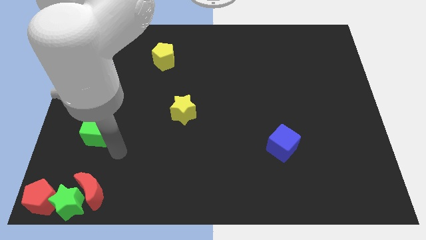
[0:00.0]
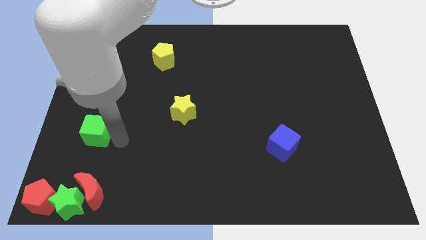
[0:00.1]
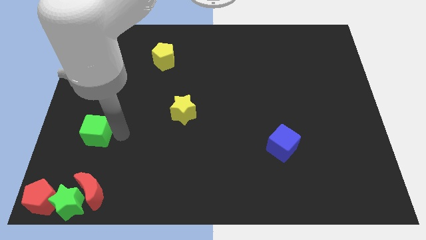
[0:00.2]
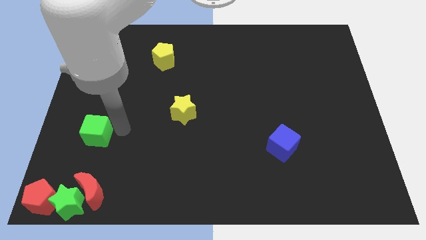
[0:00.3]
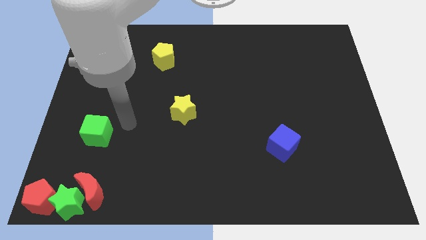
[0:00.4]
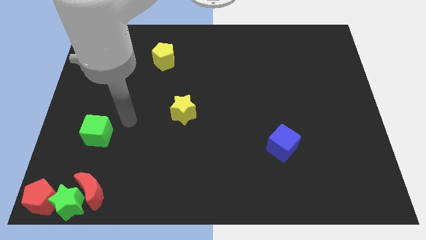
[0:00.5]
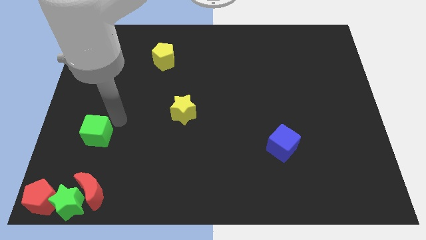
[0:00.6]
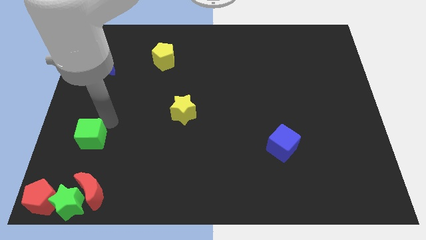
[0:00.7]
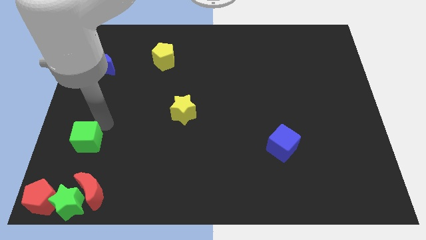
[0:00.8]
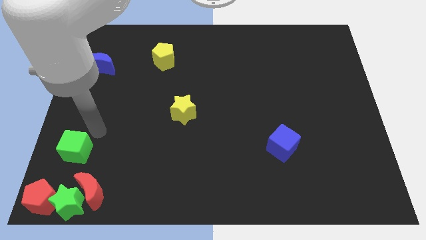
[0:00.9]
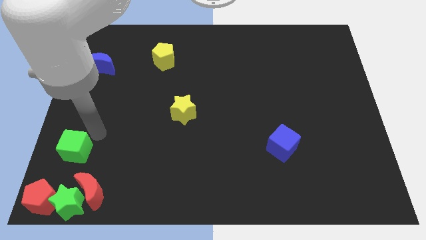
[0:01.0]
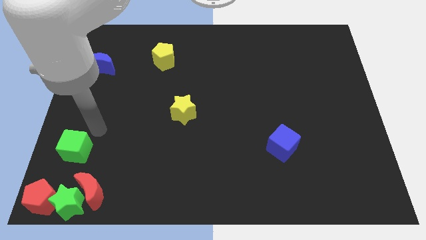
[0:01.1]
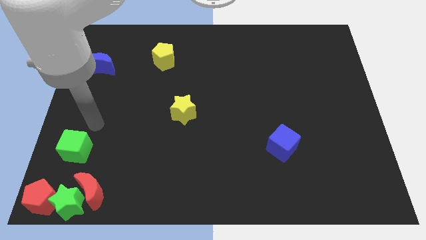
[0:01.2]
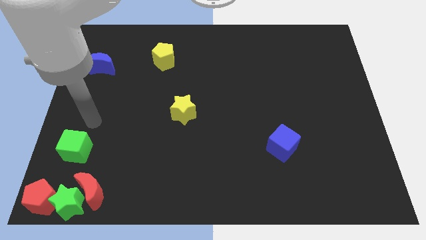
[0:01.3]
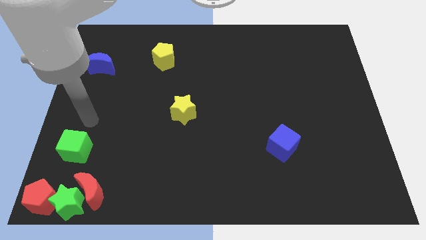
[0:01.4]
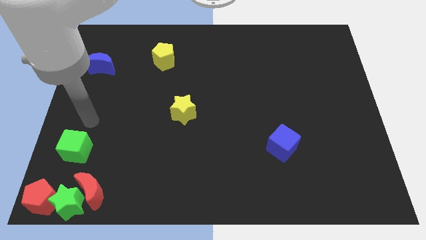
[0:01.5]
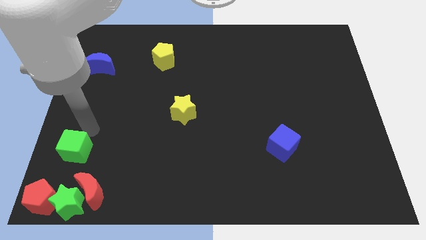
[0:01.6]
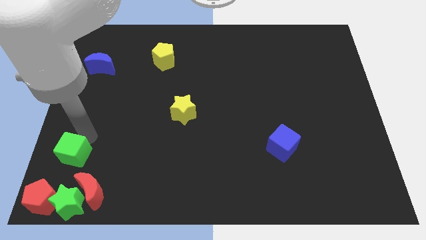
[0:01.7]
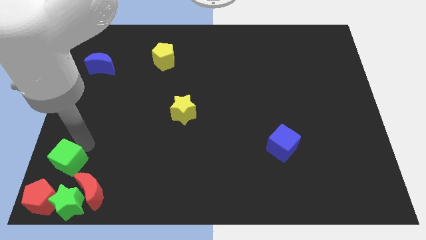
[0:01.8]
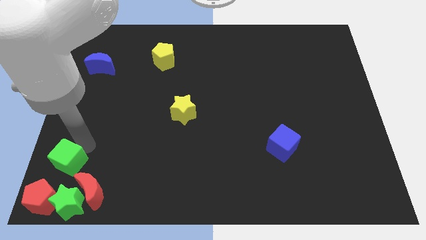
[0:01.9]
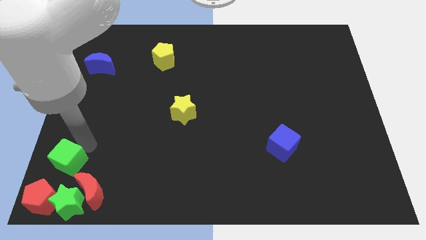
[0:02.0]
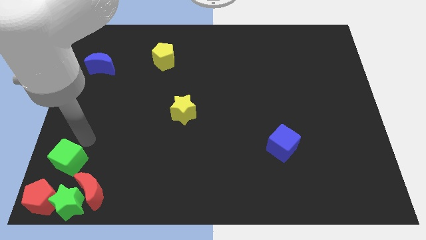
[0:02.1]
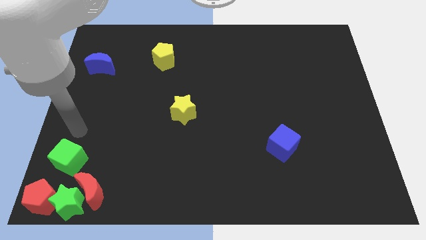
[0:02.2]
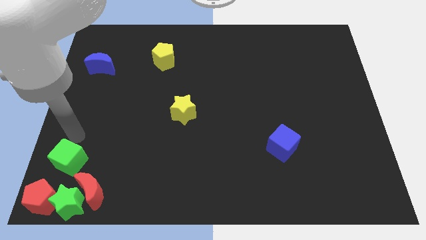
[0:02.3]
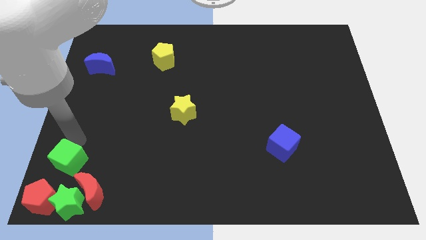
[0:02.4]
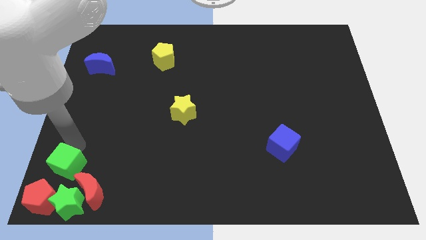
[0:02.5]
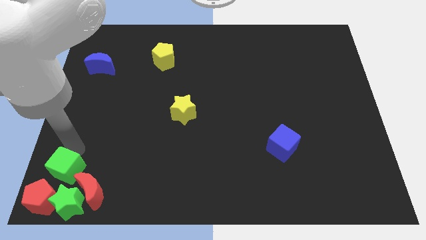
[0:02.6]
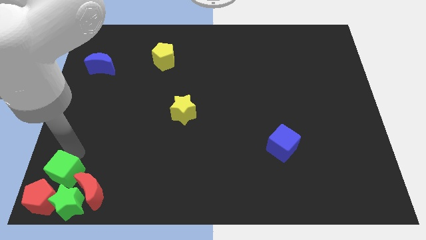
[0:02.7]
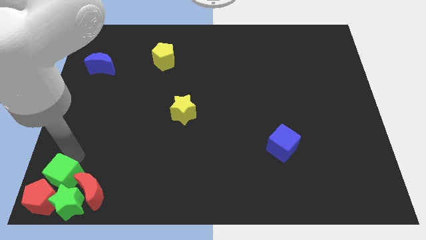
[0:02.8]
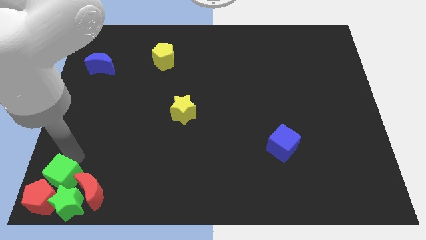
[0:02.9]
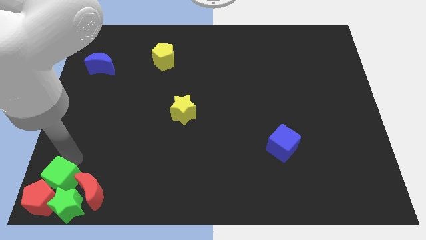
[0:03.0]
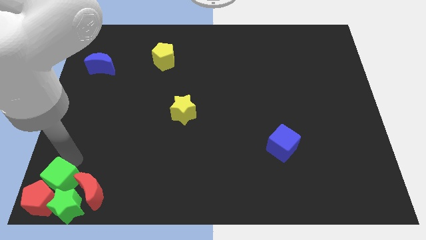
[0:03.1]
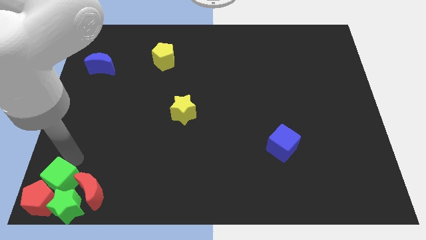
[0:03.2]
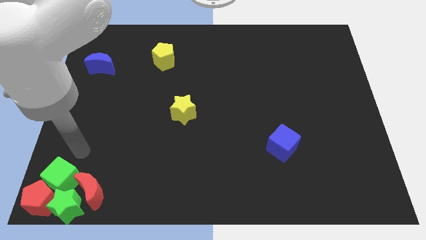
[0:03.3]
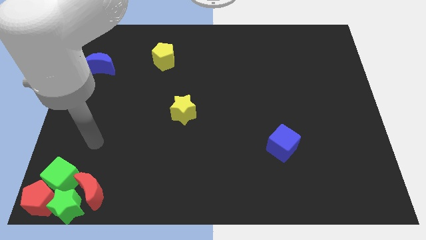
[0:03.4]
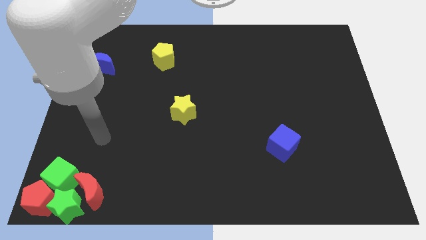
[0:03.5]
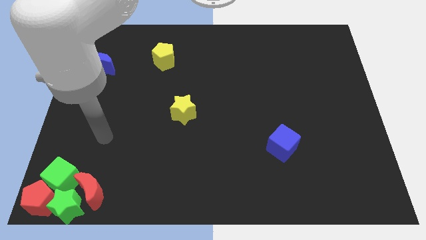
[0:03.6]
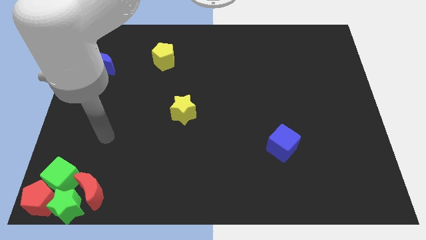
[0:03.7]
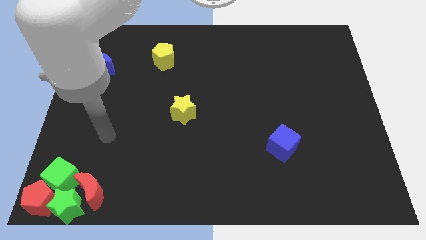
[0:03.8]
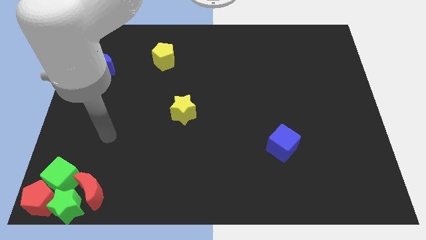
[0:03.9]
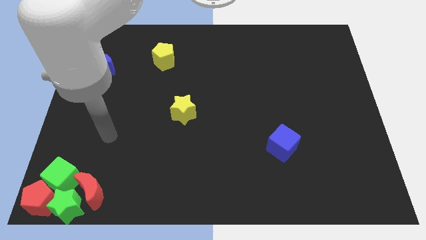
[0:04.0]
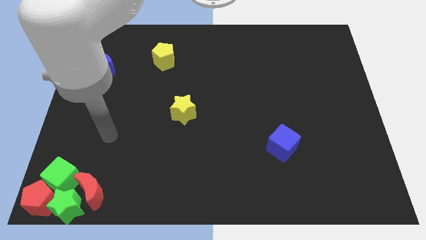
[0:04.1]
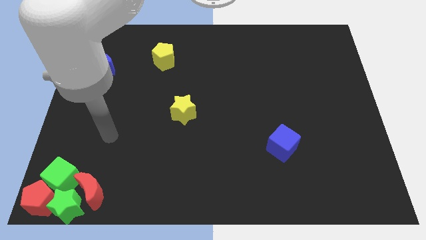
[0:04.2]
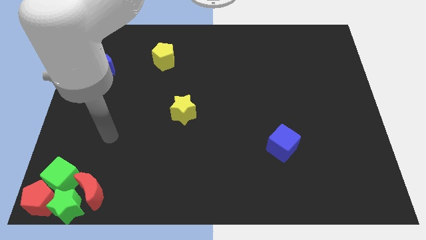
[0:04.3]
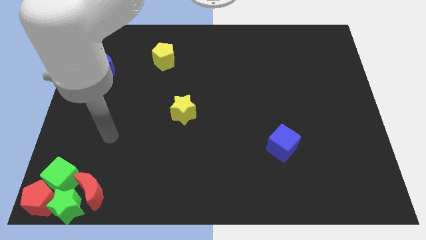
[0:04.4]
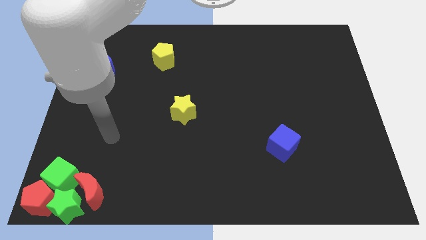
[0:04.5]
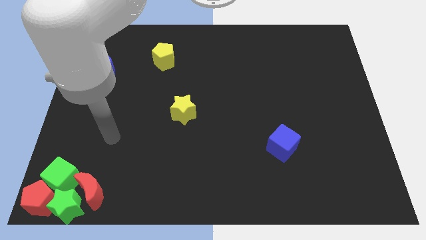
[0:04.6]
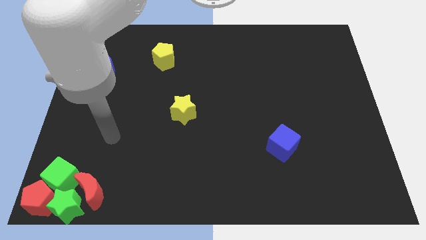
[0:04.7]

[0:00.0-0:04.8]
push the green cube into the group of blocks

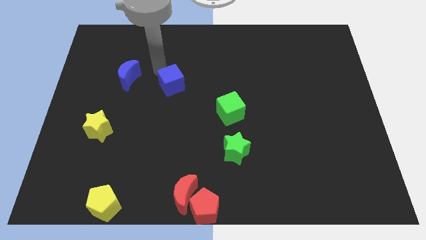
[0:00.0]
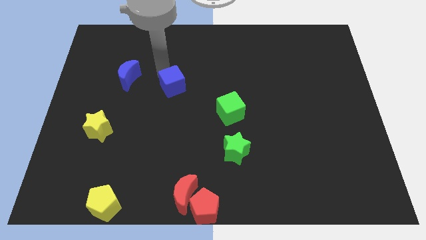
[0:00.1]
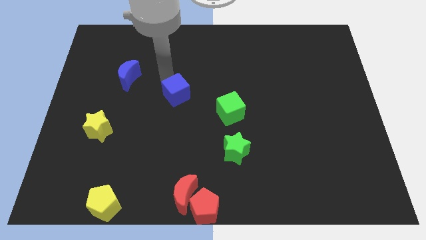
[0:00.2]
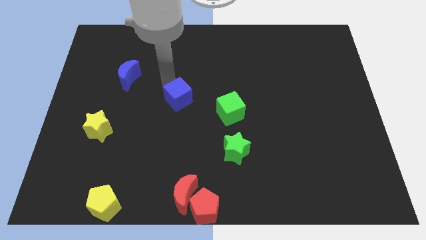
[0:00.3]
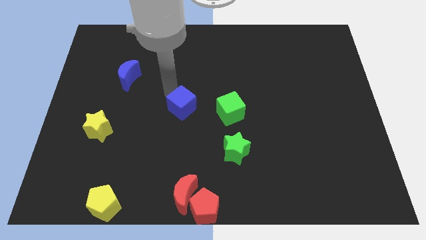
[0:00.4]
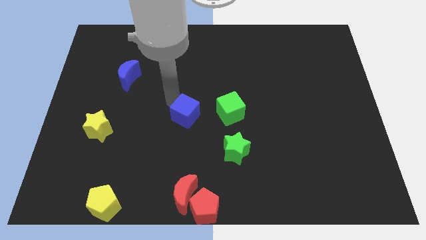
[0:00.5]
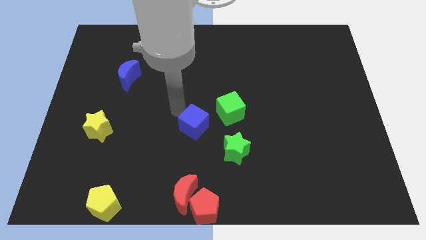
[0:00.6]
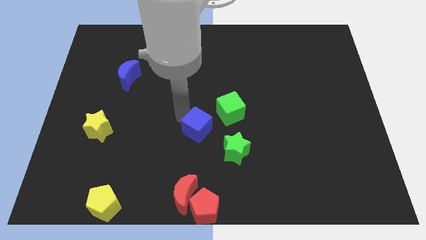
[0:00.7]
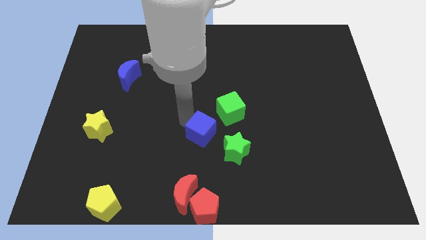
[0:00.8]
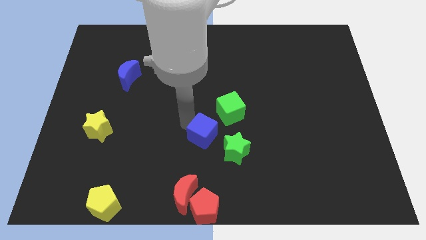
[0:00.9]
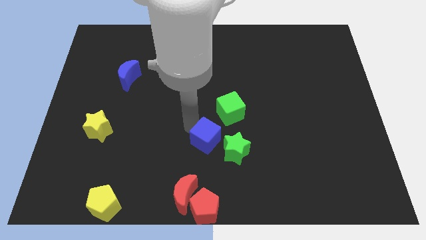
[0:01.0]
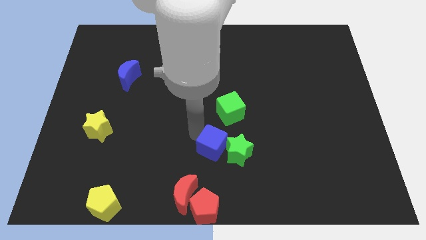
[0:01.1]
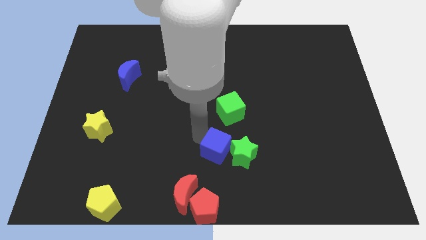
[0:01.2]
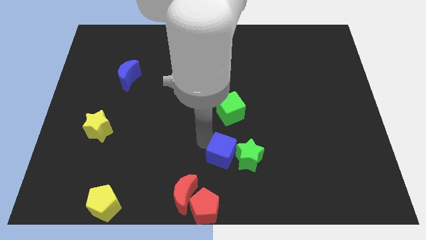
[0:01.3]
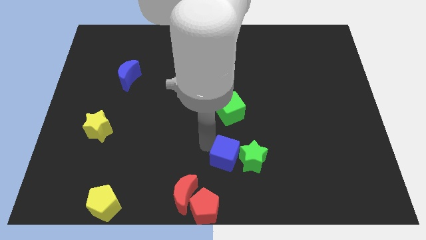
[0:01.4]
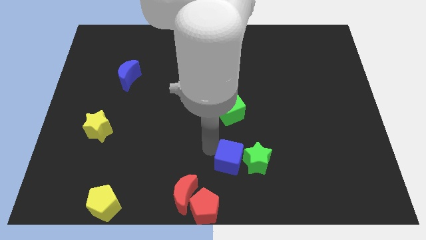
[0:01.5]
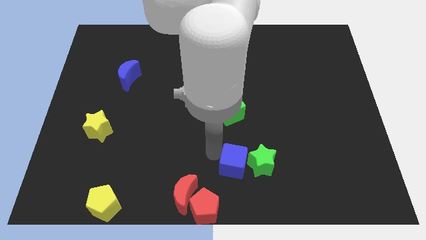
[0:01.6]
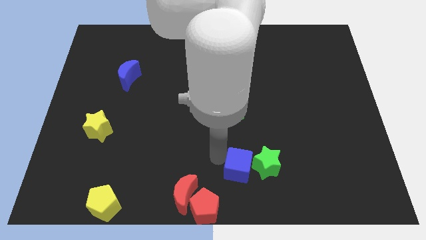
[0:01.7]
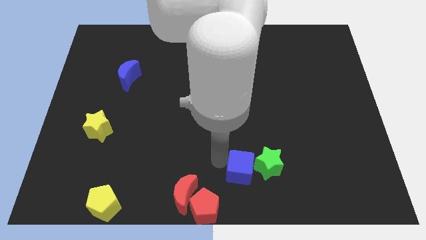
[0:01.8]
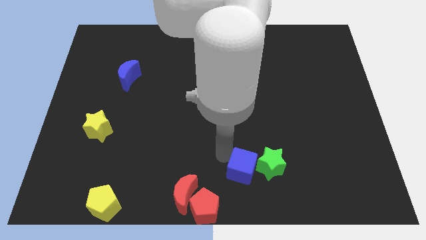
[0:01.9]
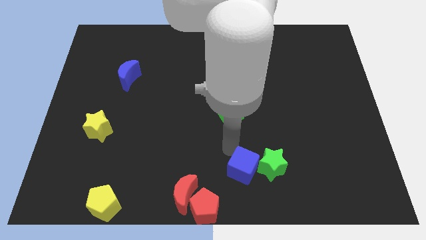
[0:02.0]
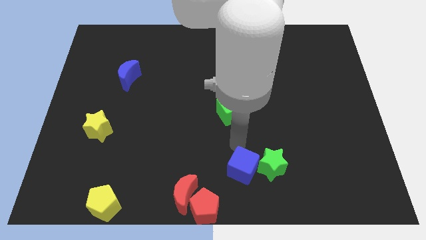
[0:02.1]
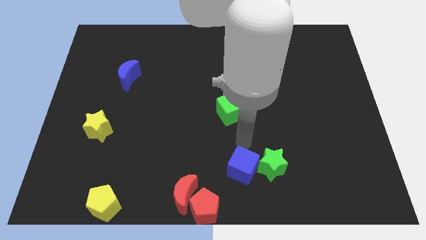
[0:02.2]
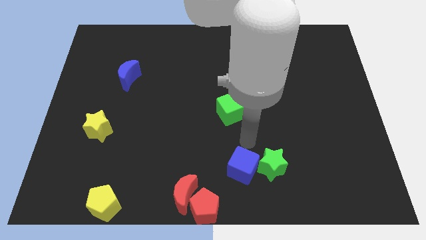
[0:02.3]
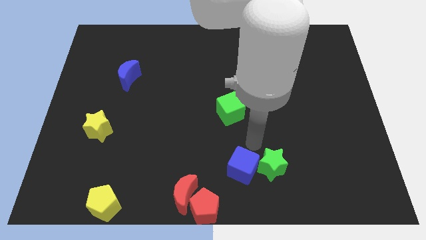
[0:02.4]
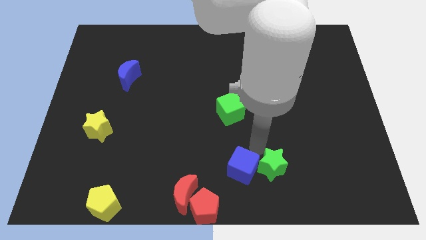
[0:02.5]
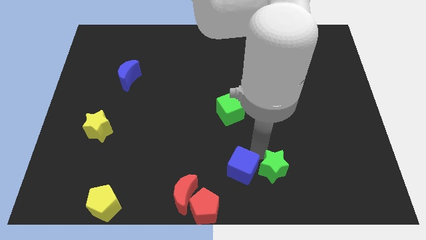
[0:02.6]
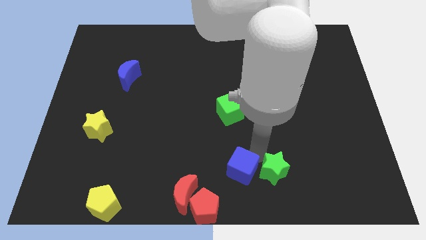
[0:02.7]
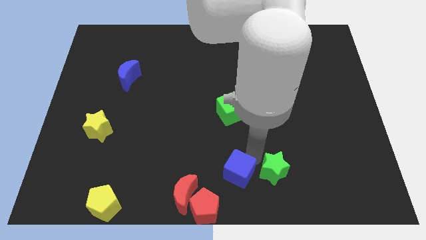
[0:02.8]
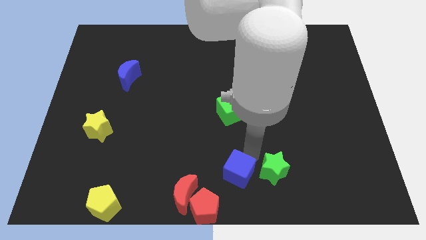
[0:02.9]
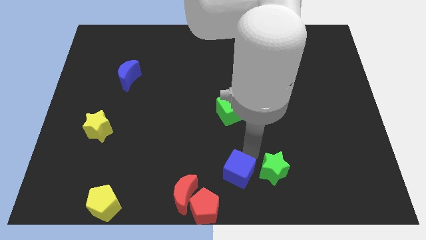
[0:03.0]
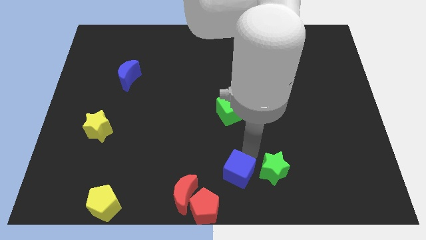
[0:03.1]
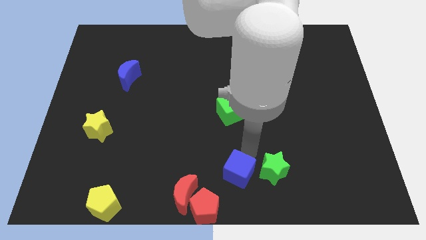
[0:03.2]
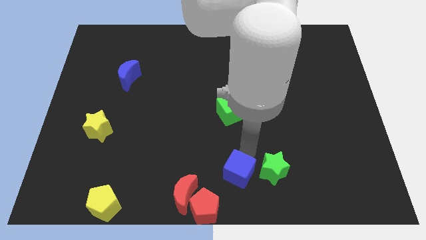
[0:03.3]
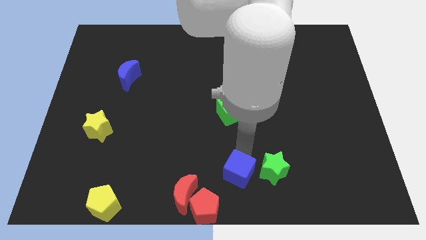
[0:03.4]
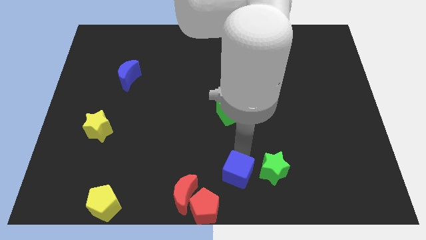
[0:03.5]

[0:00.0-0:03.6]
move the blue cube towards the down

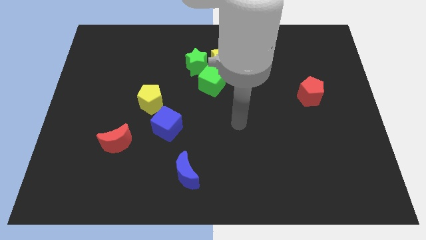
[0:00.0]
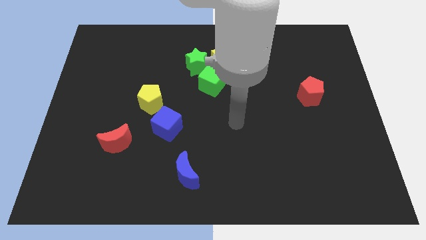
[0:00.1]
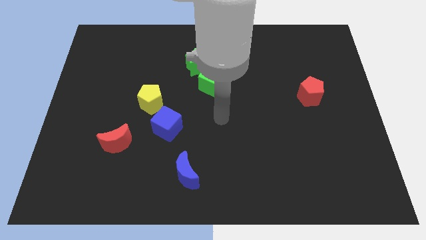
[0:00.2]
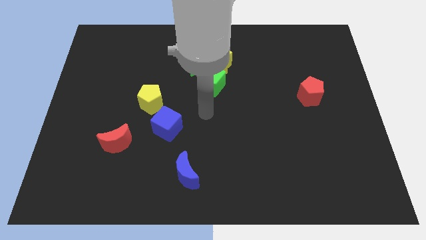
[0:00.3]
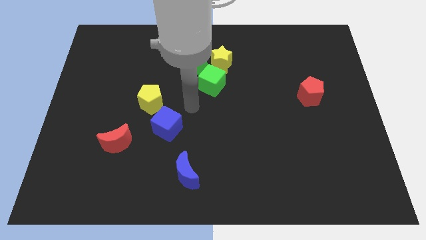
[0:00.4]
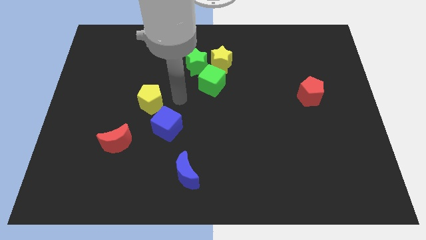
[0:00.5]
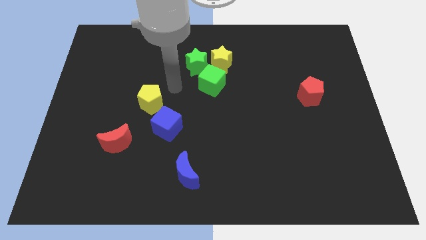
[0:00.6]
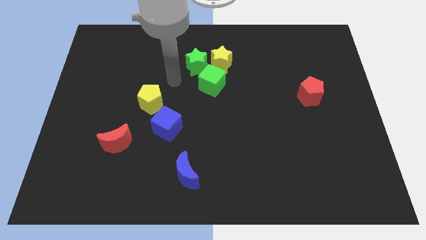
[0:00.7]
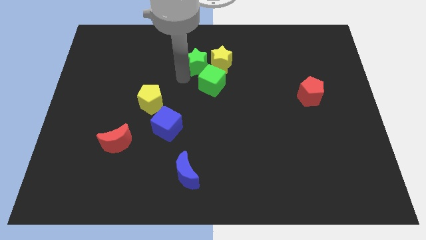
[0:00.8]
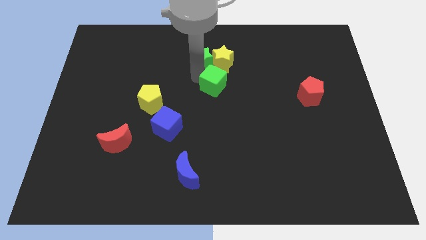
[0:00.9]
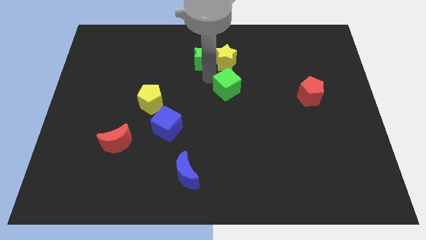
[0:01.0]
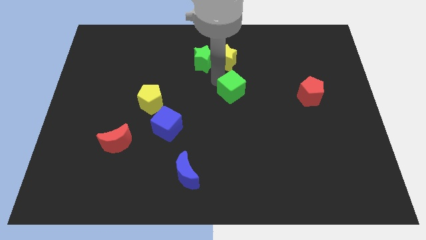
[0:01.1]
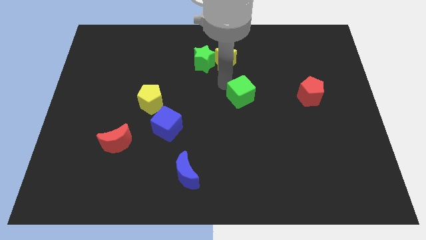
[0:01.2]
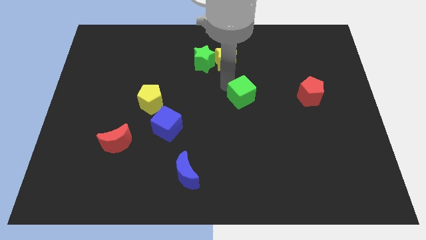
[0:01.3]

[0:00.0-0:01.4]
move the green cube away from the green star
